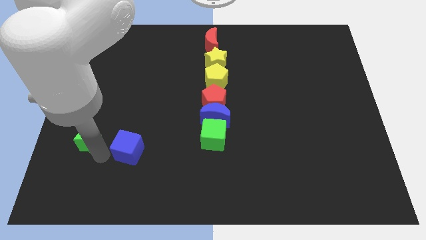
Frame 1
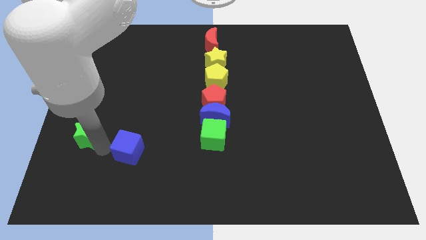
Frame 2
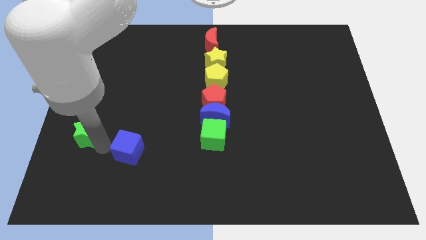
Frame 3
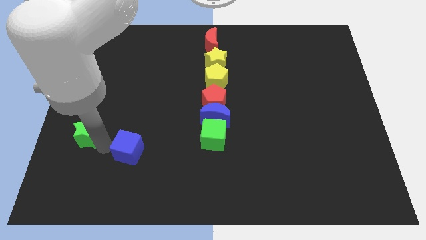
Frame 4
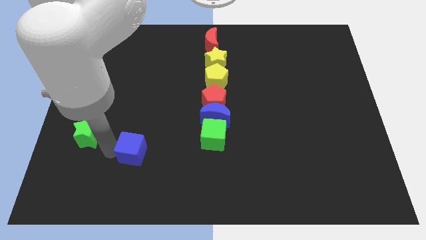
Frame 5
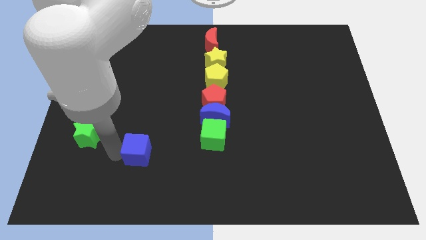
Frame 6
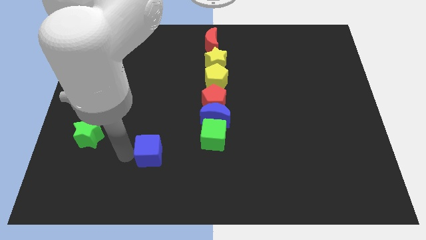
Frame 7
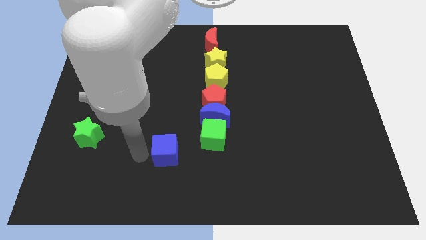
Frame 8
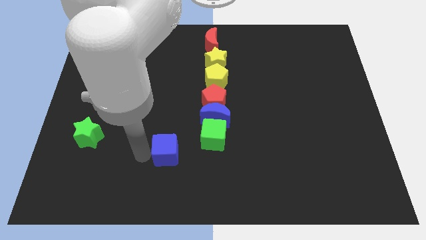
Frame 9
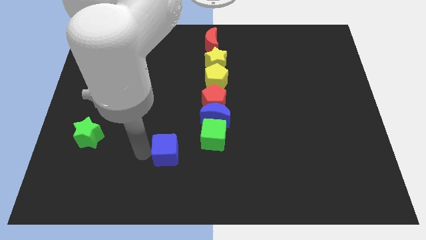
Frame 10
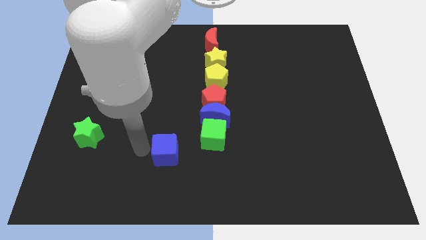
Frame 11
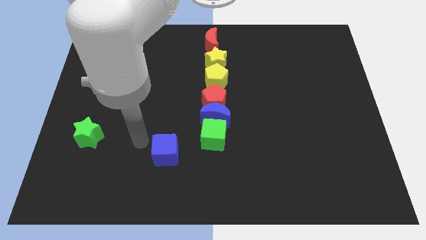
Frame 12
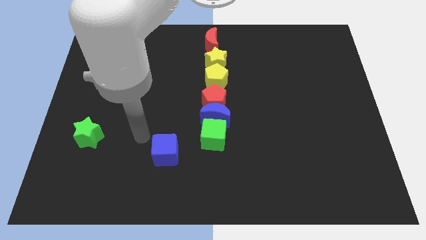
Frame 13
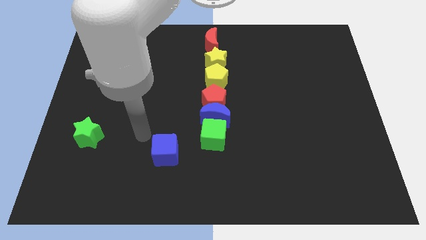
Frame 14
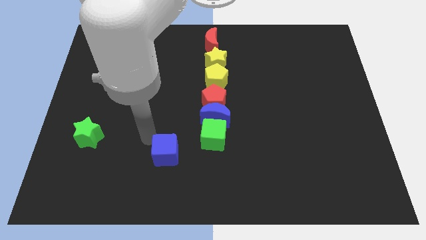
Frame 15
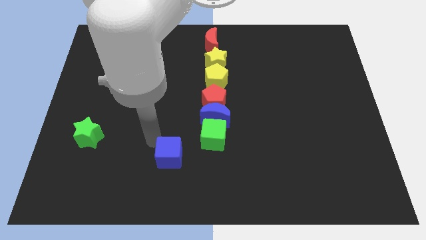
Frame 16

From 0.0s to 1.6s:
move the blue cube to the right side of the board

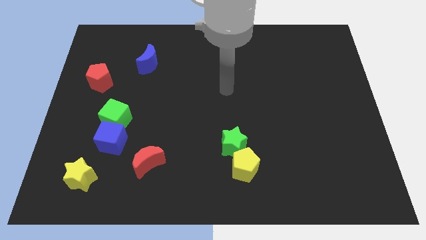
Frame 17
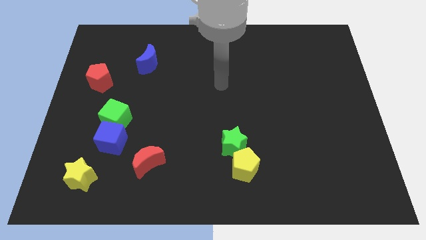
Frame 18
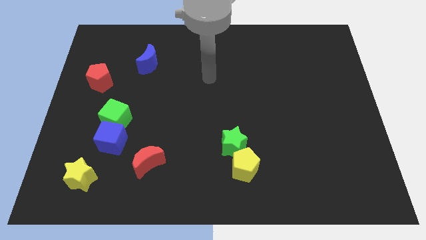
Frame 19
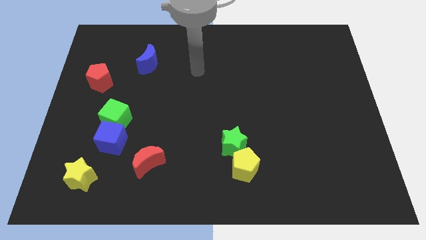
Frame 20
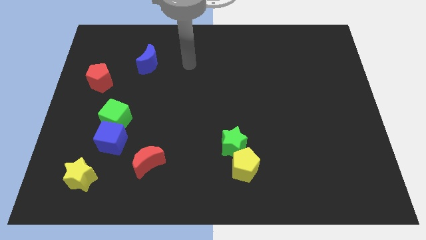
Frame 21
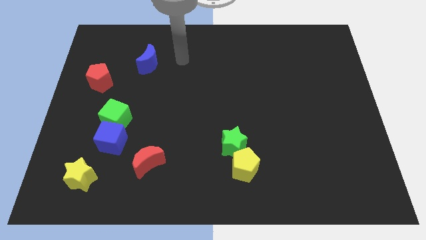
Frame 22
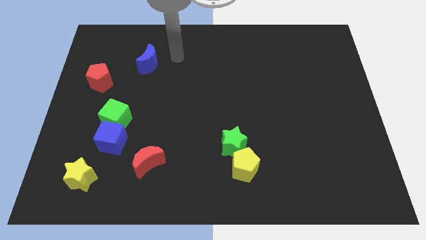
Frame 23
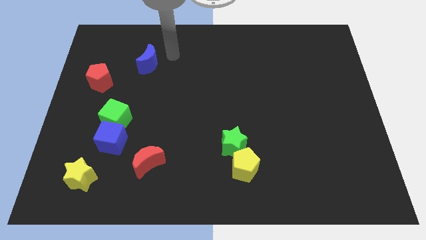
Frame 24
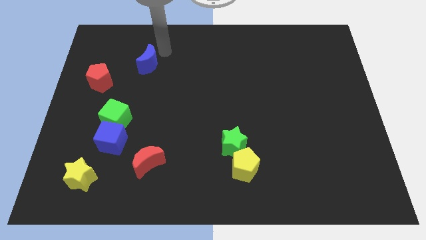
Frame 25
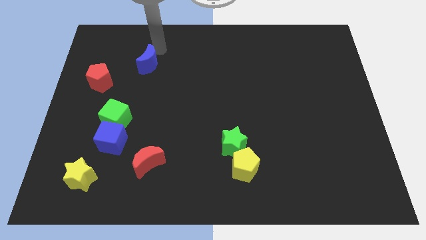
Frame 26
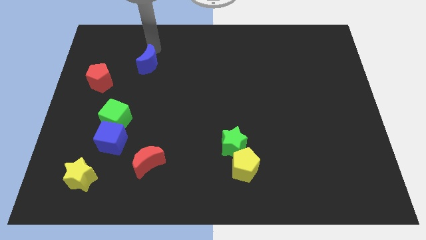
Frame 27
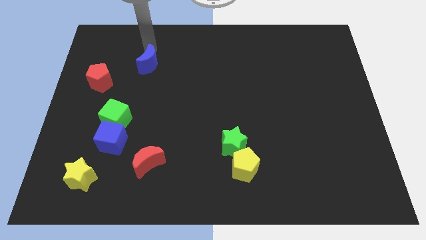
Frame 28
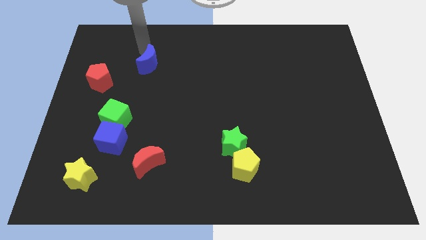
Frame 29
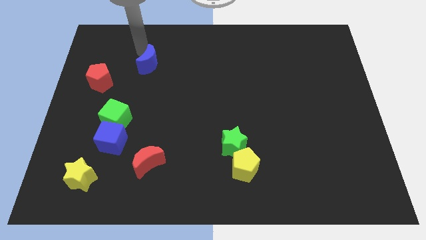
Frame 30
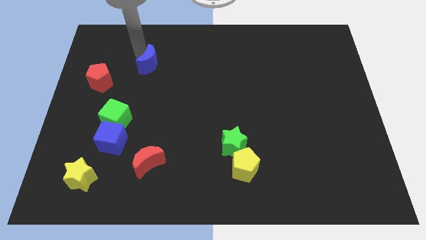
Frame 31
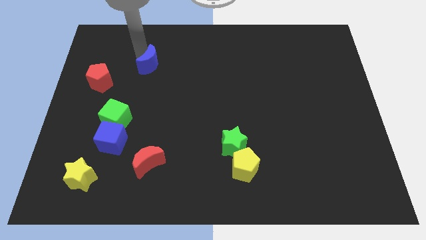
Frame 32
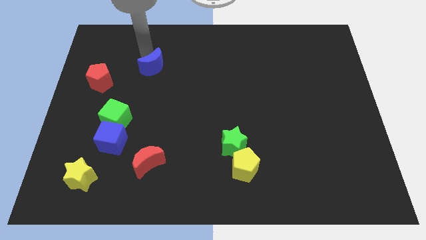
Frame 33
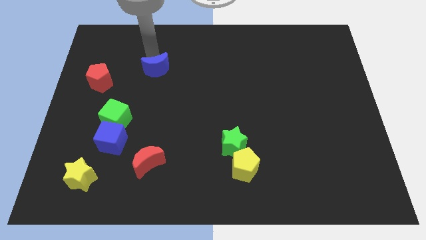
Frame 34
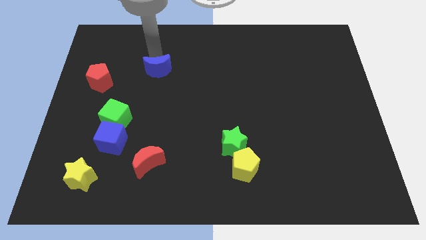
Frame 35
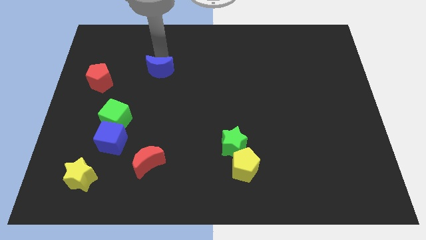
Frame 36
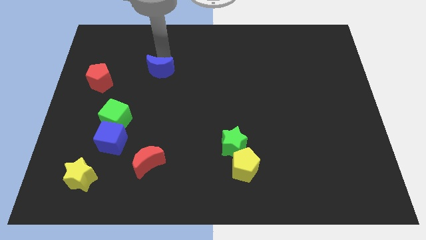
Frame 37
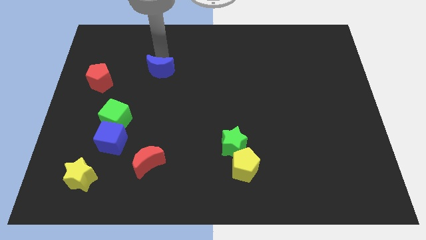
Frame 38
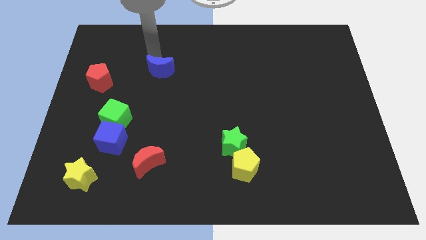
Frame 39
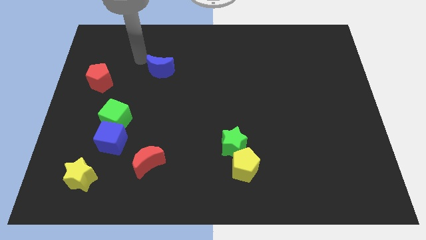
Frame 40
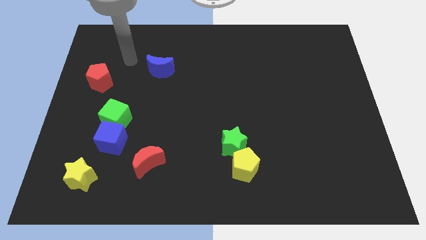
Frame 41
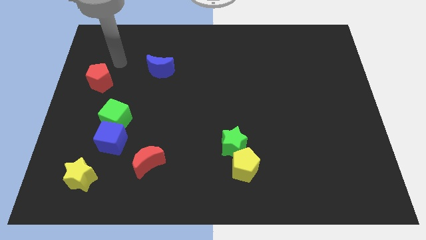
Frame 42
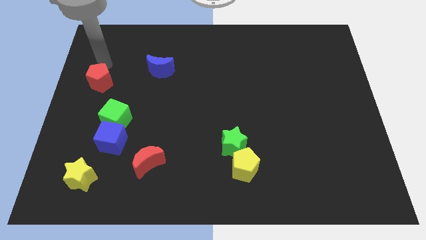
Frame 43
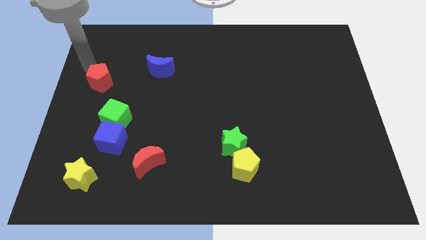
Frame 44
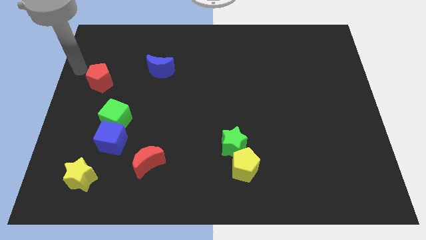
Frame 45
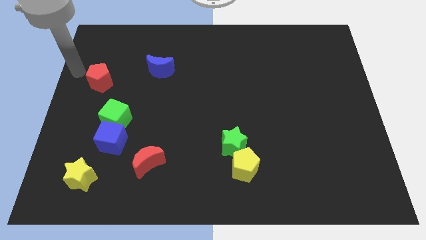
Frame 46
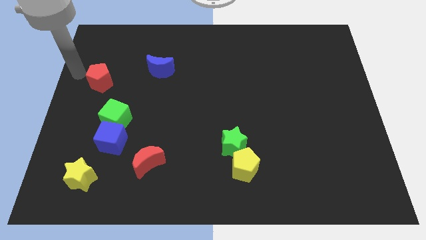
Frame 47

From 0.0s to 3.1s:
slide the blue moon diagonally right of the red pentagon

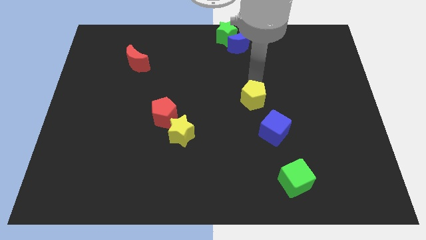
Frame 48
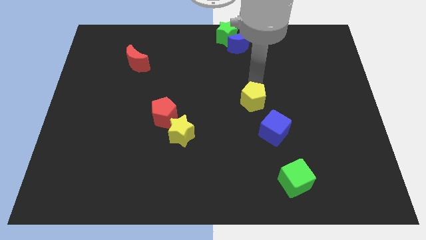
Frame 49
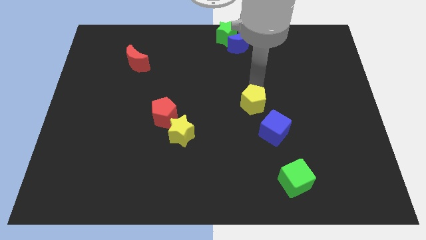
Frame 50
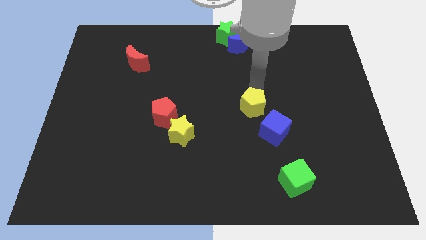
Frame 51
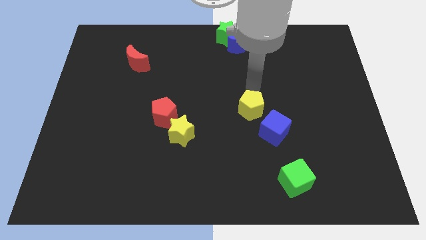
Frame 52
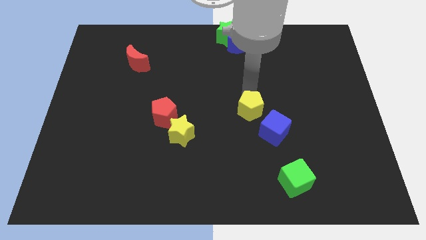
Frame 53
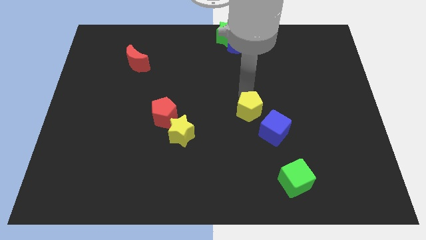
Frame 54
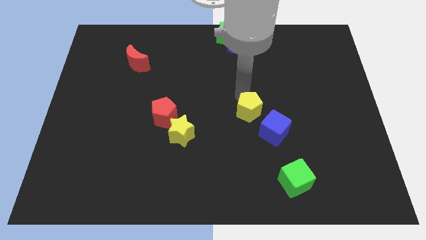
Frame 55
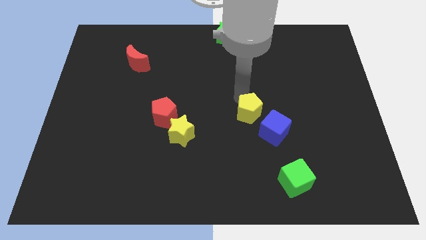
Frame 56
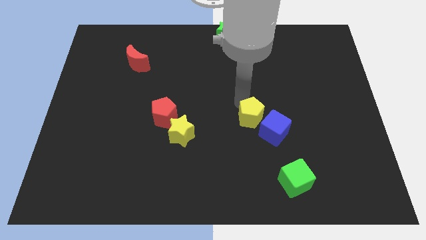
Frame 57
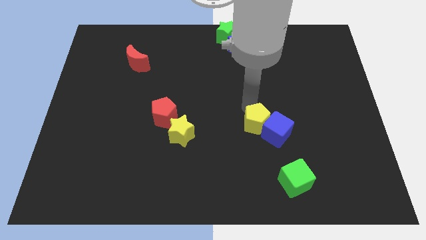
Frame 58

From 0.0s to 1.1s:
move the yellow pentagon to the blue cube

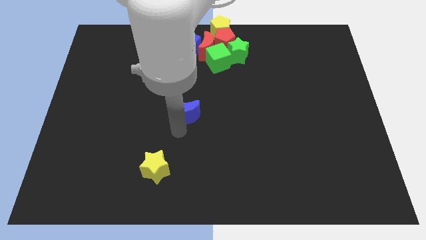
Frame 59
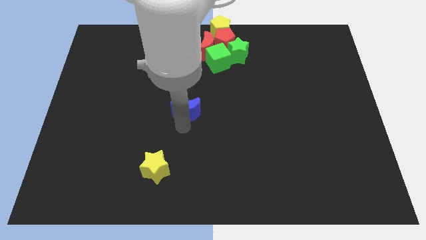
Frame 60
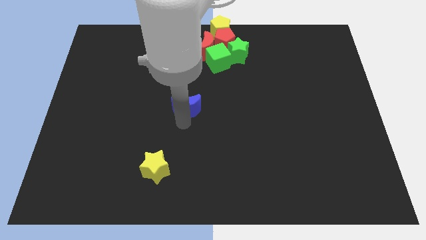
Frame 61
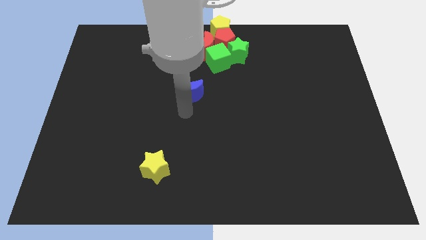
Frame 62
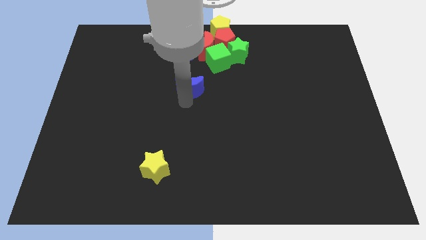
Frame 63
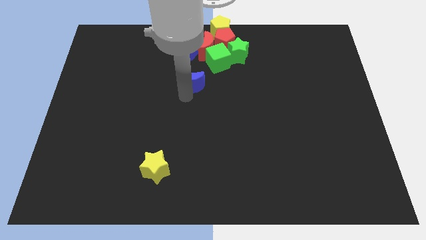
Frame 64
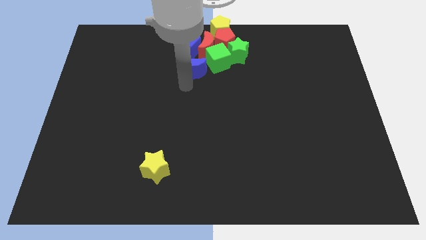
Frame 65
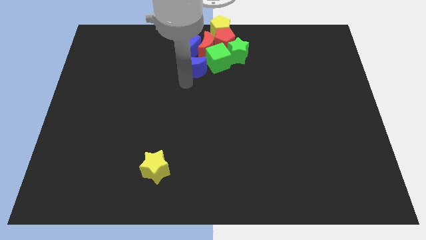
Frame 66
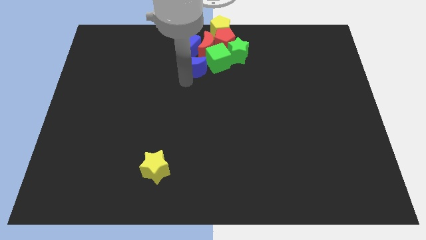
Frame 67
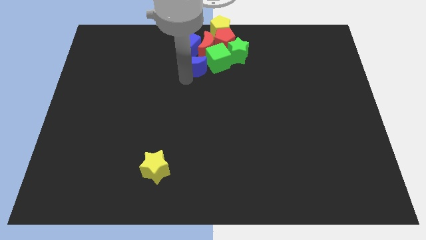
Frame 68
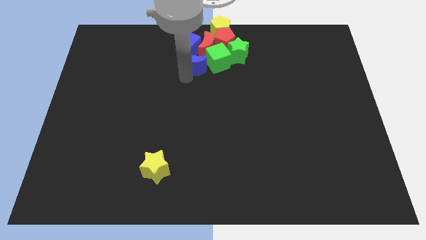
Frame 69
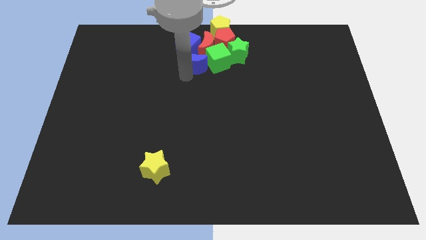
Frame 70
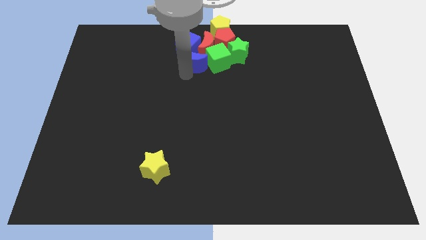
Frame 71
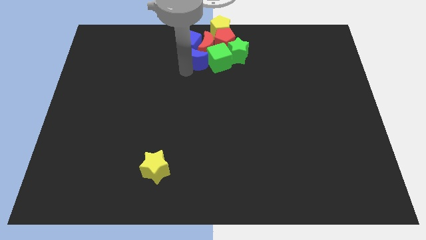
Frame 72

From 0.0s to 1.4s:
move the blue crescent towards the group of blocks at the top center of the board

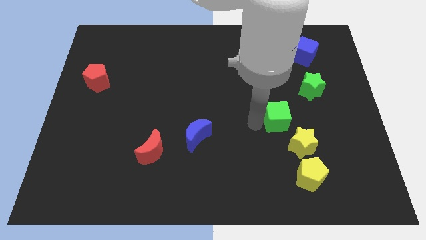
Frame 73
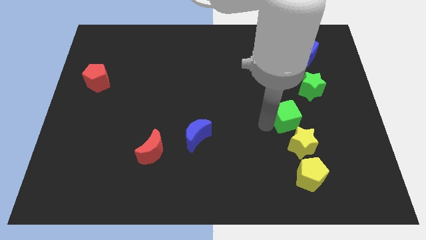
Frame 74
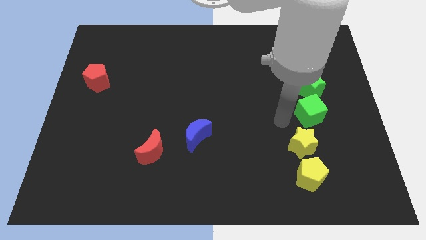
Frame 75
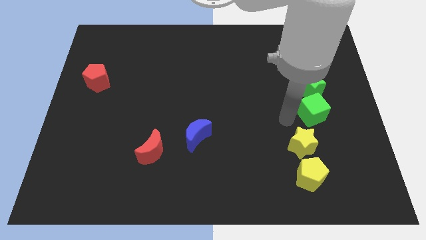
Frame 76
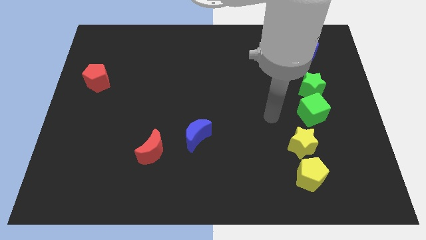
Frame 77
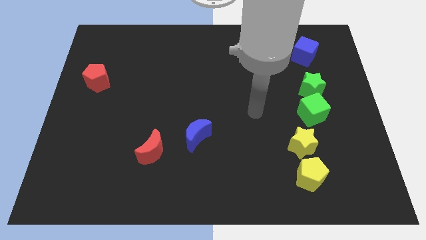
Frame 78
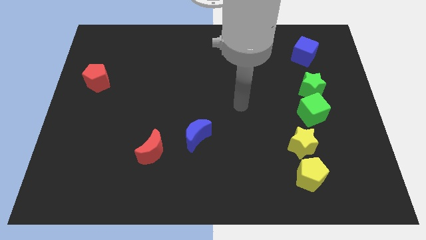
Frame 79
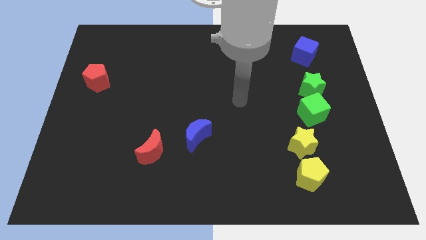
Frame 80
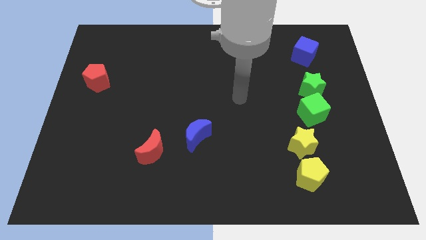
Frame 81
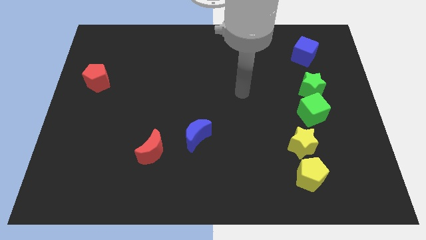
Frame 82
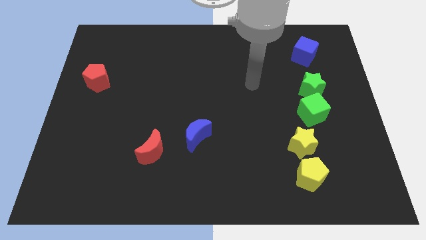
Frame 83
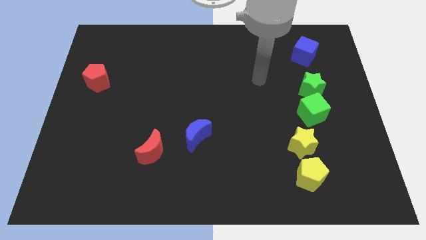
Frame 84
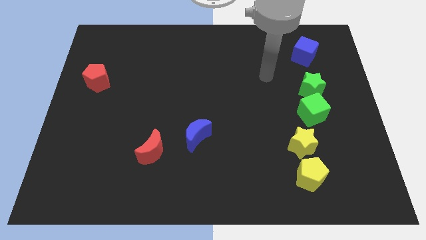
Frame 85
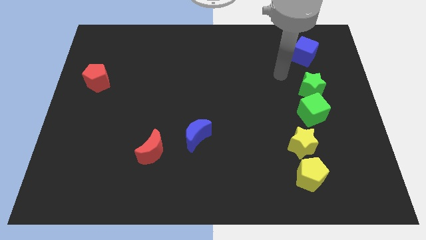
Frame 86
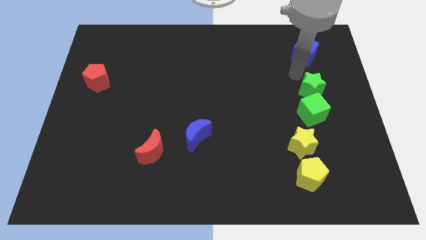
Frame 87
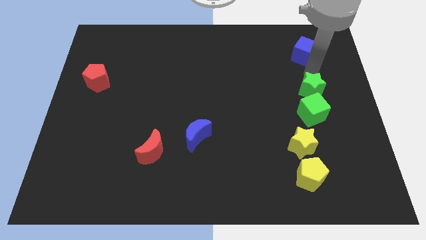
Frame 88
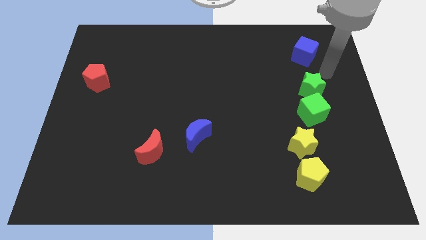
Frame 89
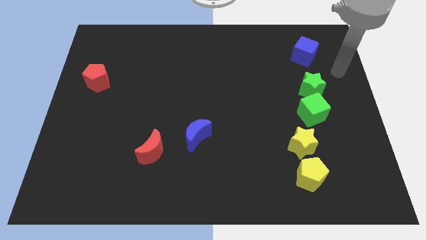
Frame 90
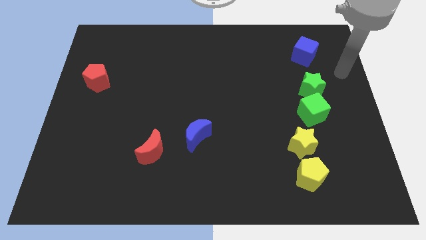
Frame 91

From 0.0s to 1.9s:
move the green cube to the bottom of the green star
